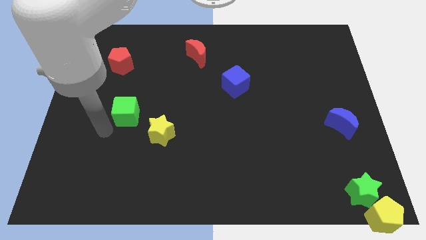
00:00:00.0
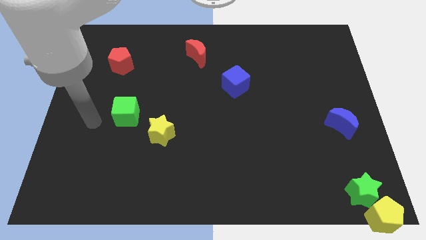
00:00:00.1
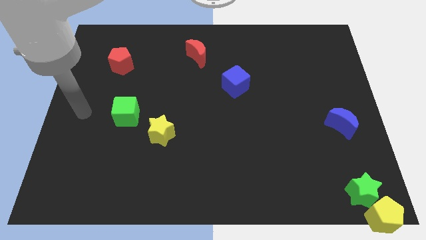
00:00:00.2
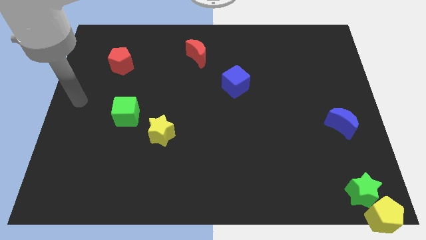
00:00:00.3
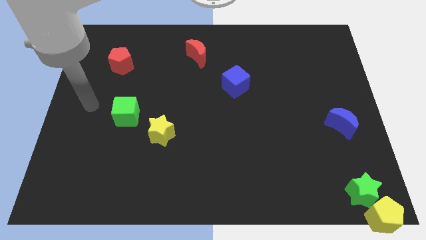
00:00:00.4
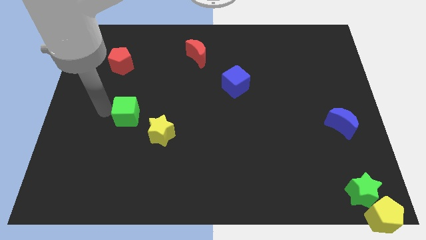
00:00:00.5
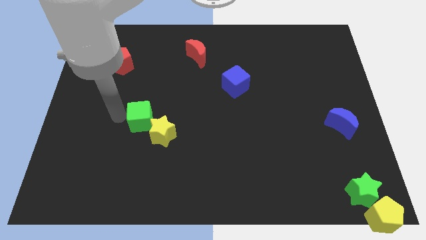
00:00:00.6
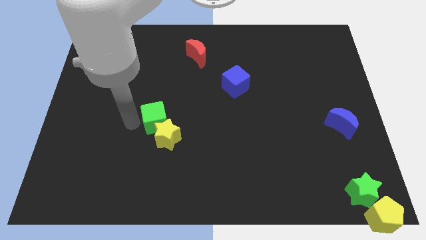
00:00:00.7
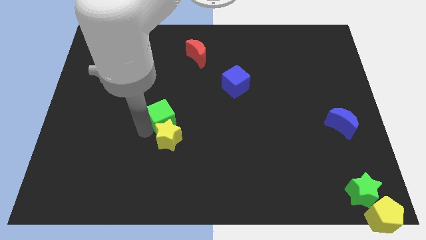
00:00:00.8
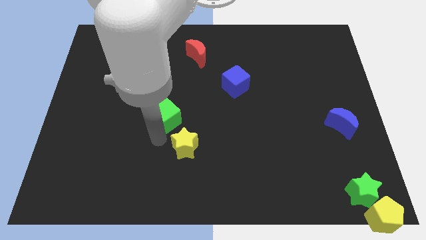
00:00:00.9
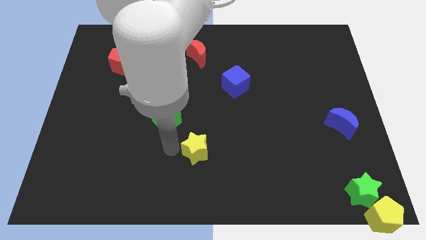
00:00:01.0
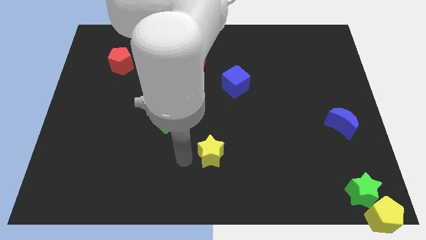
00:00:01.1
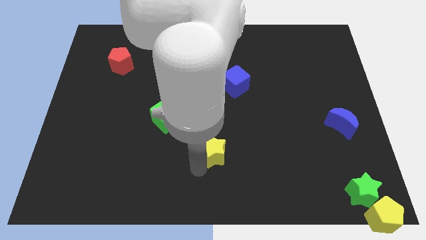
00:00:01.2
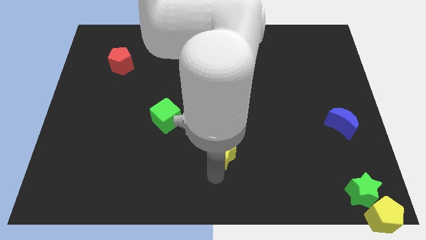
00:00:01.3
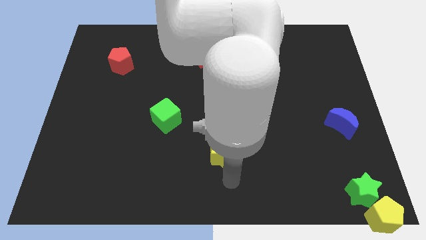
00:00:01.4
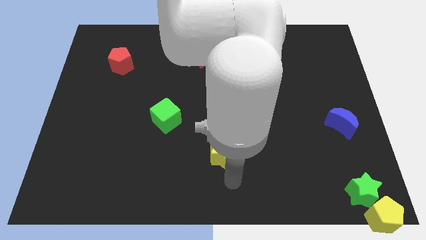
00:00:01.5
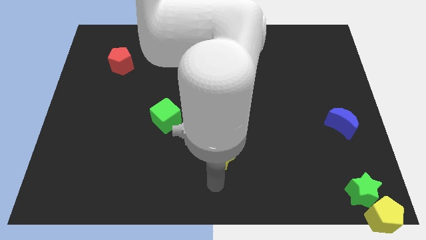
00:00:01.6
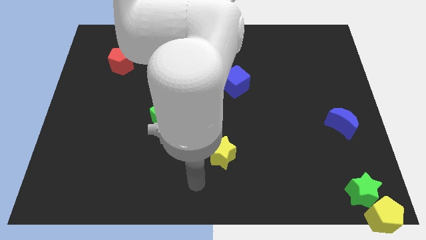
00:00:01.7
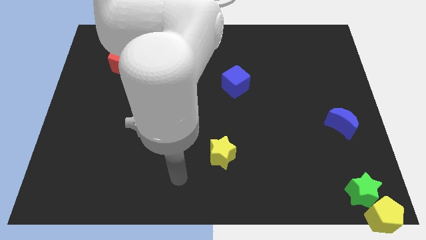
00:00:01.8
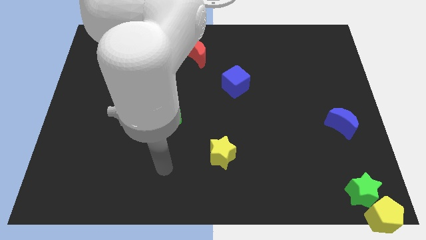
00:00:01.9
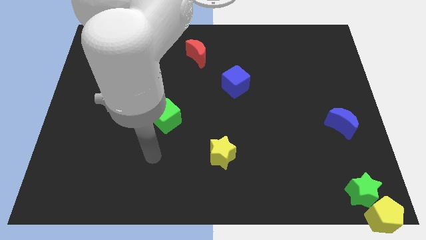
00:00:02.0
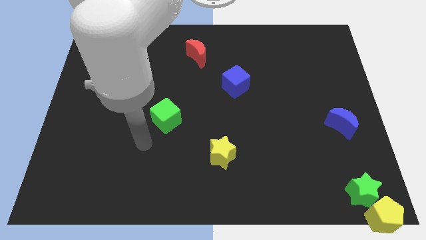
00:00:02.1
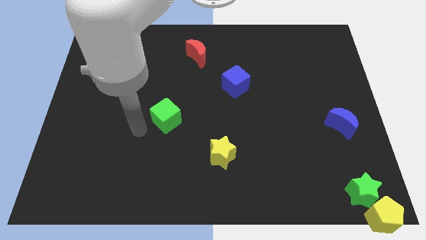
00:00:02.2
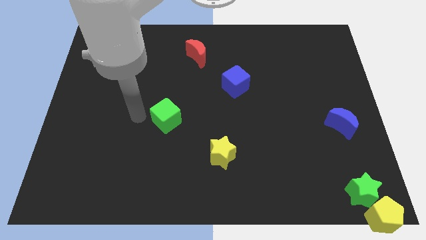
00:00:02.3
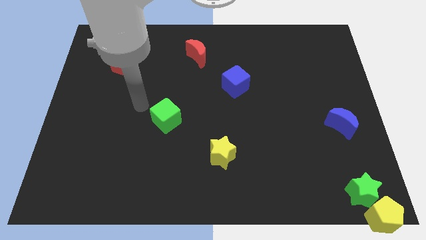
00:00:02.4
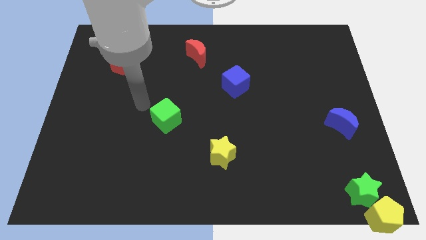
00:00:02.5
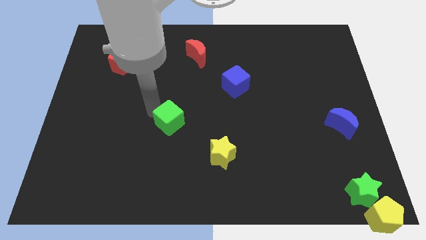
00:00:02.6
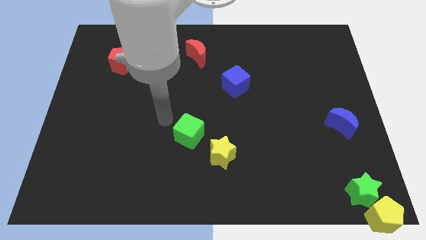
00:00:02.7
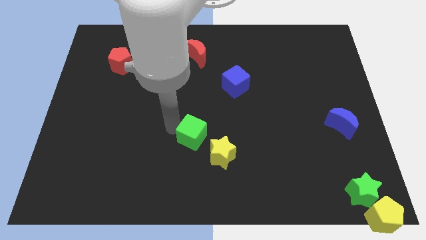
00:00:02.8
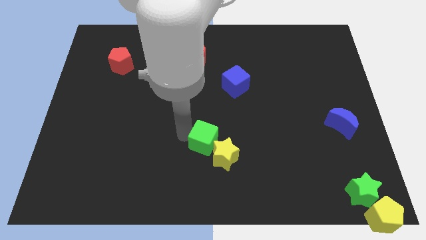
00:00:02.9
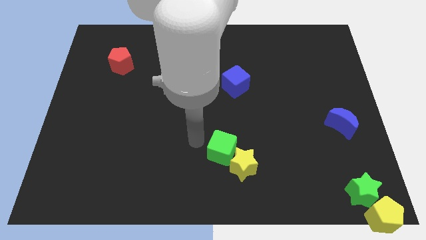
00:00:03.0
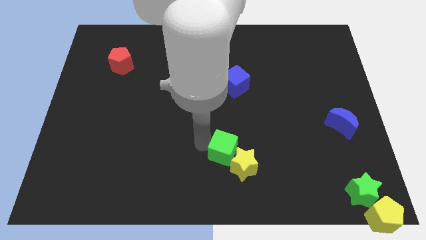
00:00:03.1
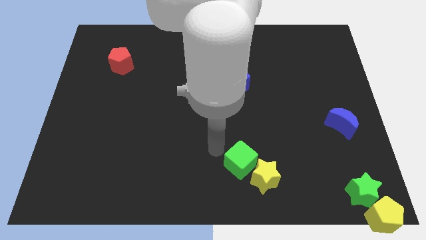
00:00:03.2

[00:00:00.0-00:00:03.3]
move green cube into the yellow star

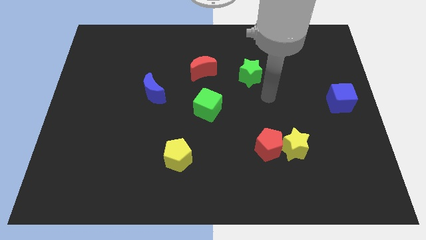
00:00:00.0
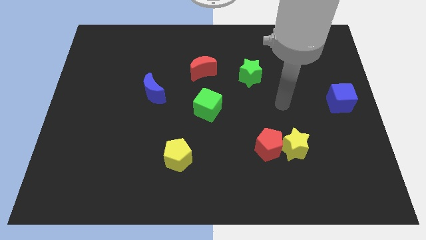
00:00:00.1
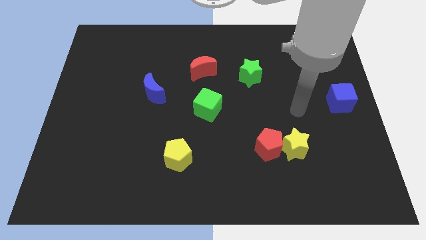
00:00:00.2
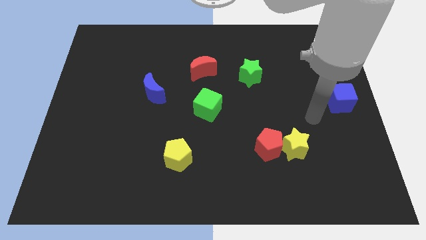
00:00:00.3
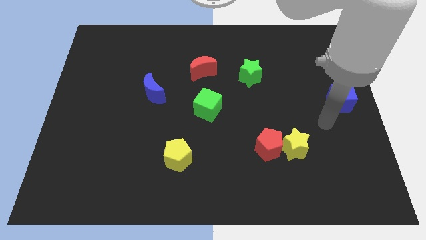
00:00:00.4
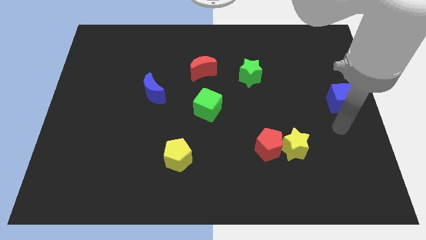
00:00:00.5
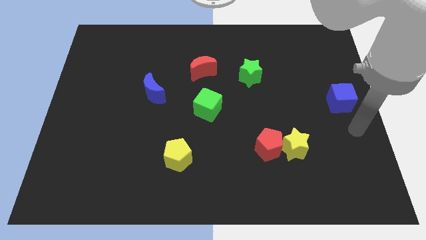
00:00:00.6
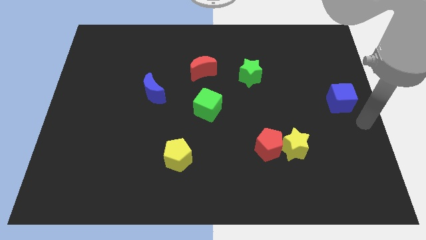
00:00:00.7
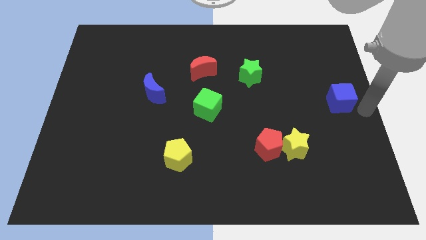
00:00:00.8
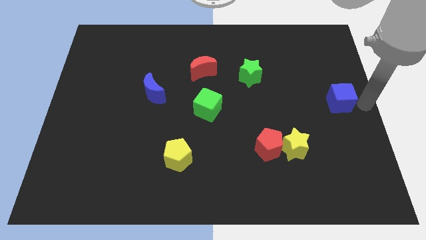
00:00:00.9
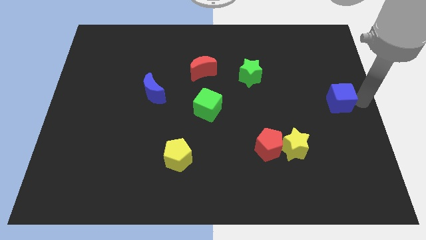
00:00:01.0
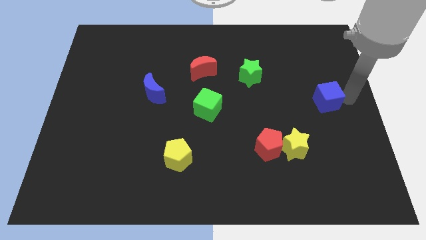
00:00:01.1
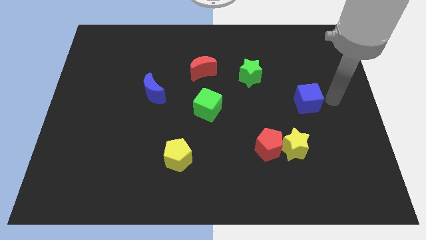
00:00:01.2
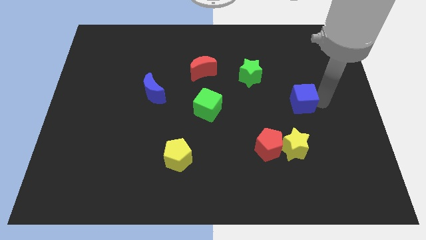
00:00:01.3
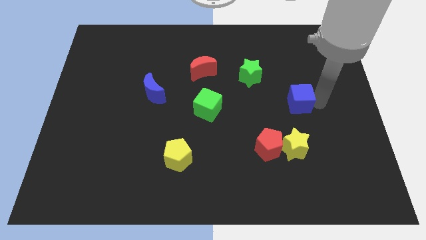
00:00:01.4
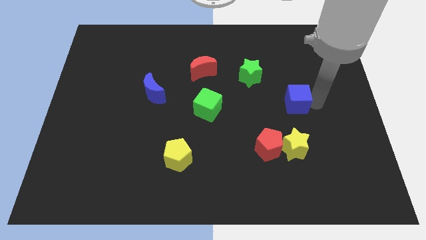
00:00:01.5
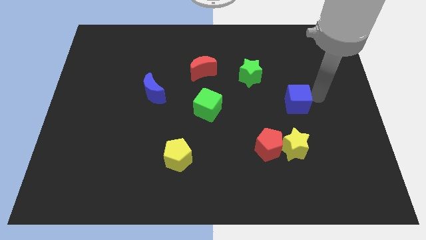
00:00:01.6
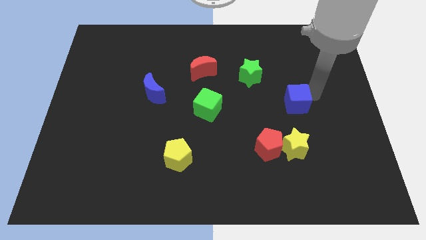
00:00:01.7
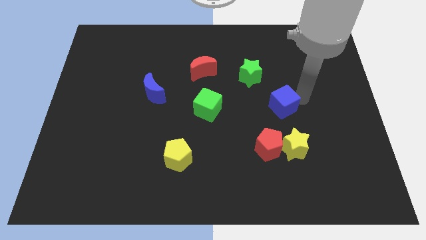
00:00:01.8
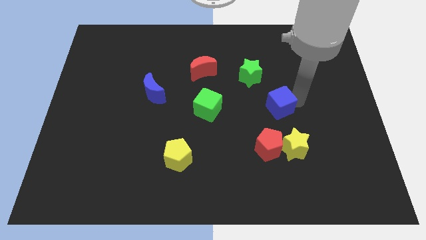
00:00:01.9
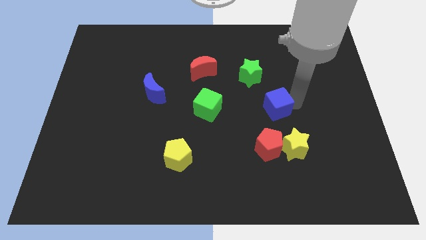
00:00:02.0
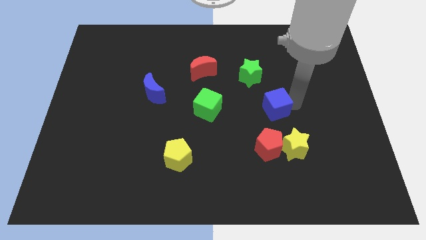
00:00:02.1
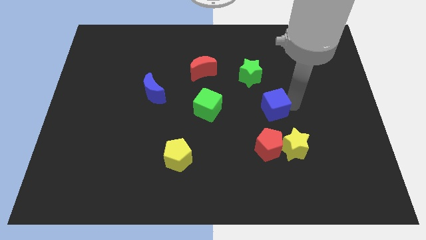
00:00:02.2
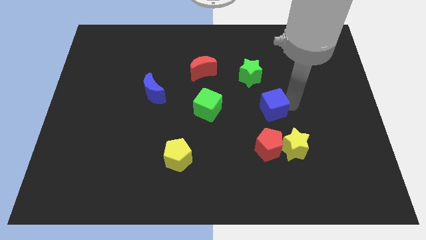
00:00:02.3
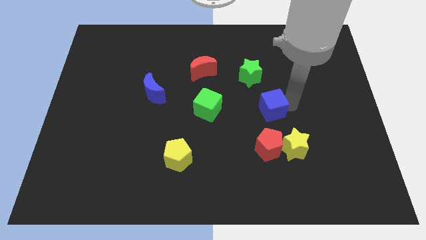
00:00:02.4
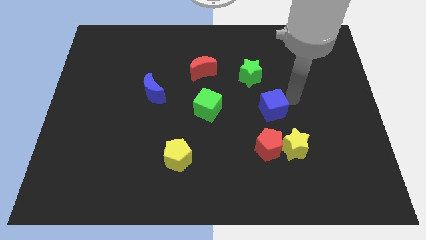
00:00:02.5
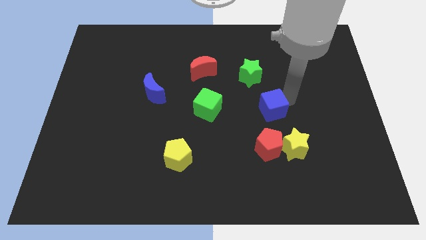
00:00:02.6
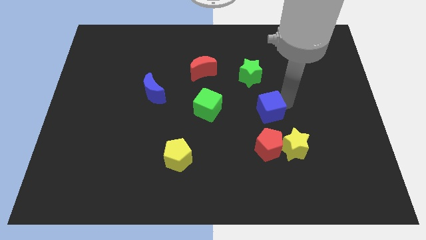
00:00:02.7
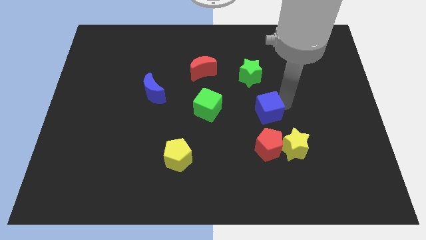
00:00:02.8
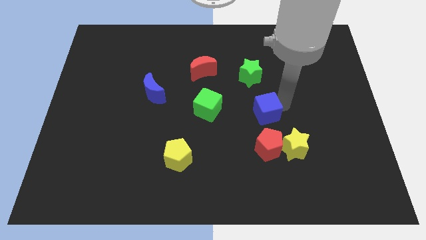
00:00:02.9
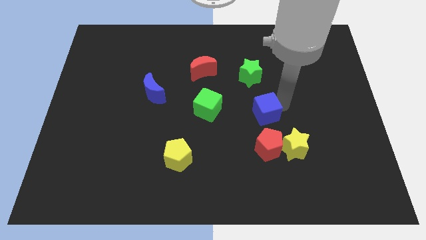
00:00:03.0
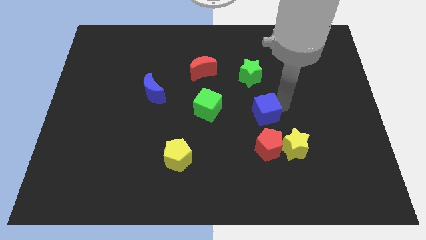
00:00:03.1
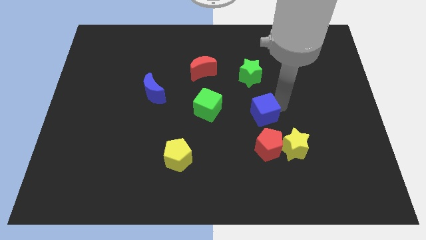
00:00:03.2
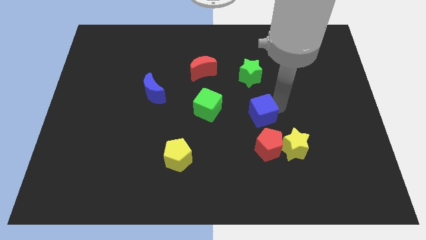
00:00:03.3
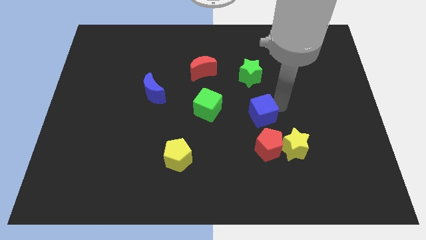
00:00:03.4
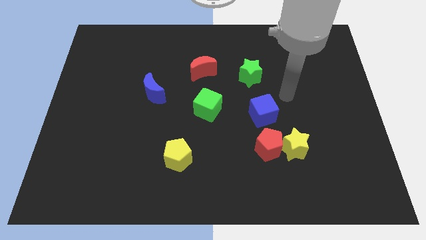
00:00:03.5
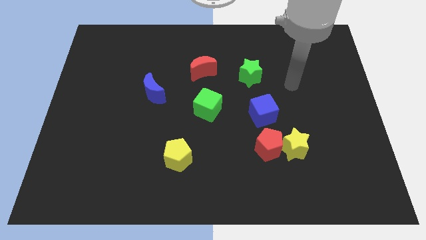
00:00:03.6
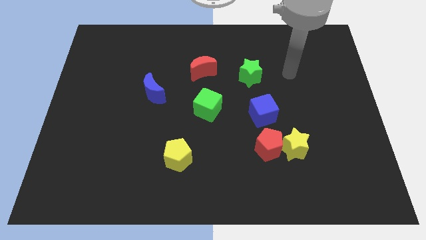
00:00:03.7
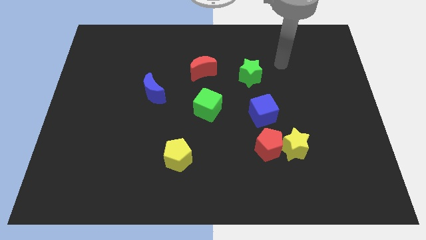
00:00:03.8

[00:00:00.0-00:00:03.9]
place the blue cube above the red pentagon

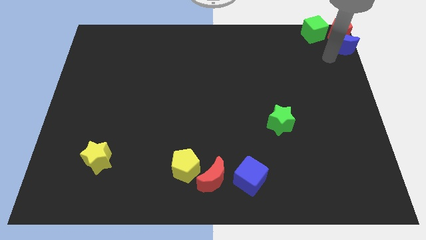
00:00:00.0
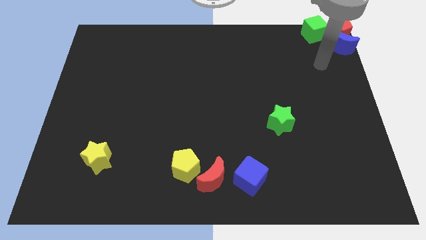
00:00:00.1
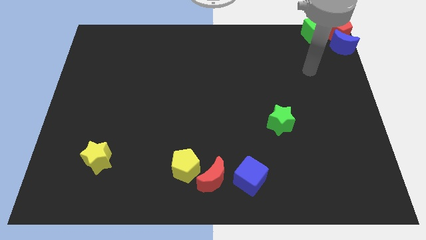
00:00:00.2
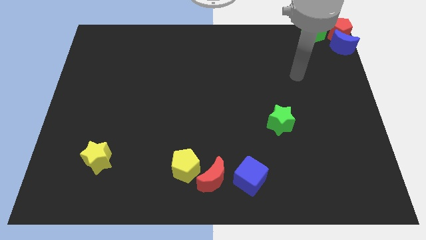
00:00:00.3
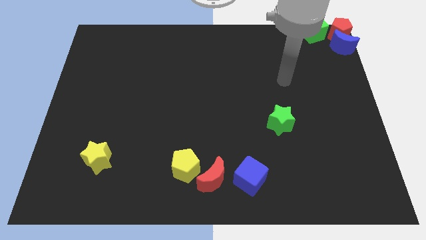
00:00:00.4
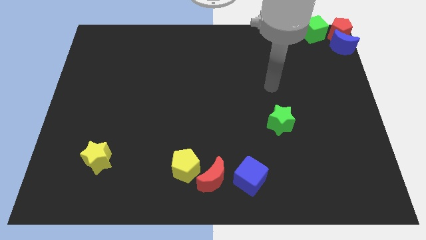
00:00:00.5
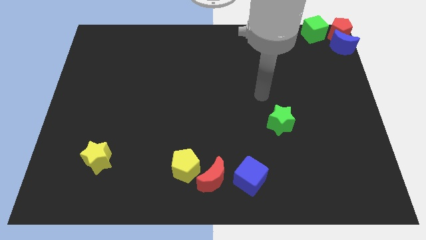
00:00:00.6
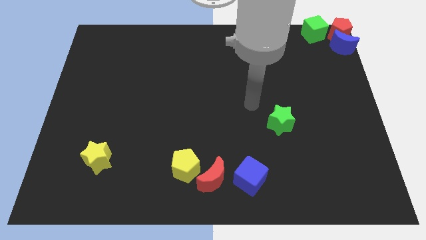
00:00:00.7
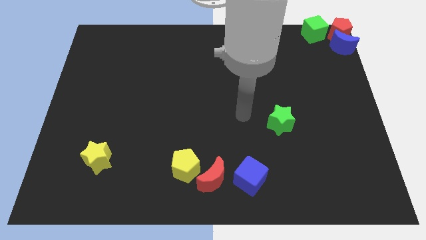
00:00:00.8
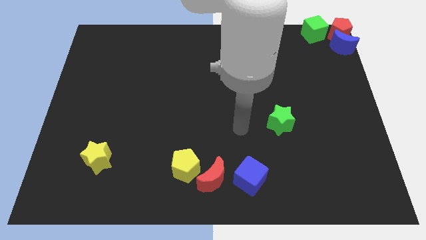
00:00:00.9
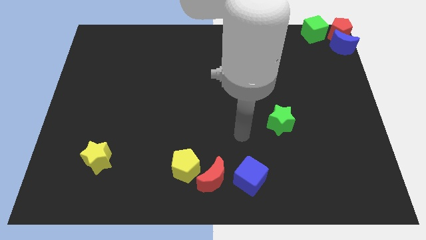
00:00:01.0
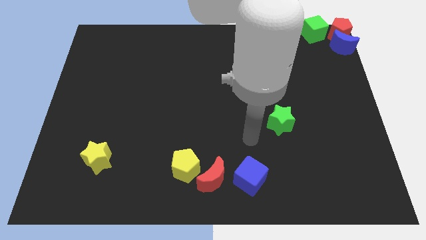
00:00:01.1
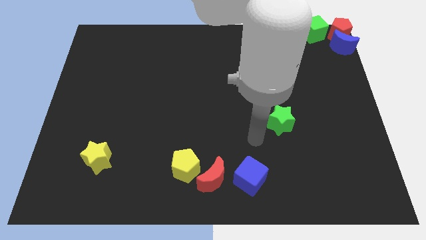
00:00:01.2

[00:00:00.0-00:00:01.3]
move your arm away from the blue moon

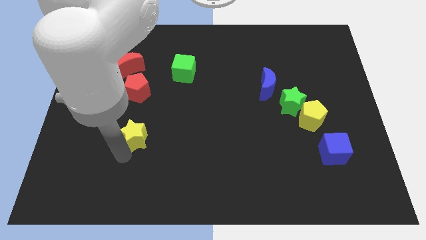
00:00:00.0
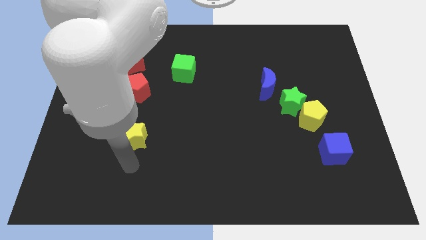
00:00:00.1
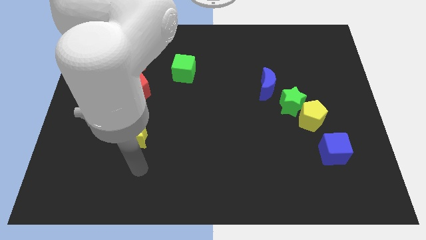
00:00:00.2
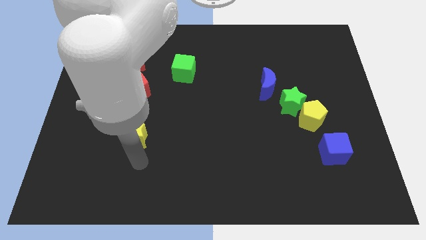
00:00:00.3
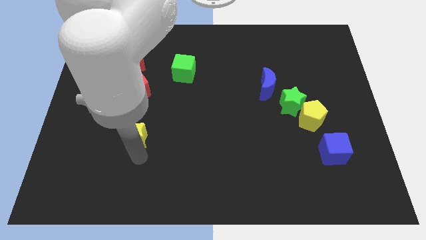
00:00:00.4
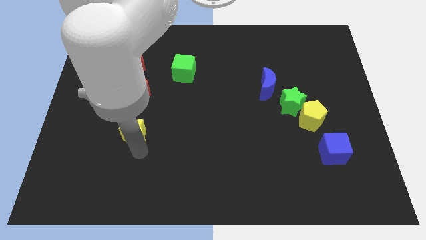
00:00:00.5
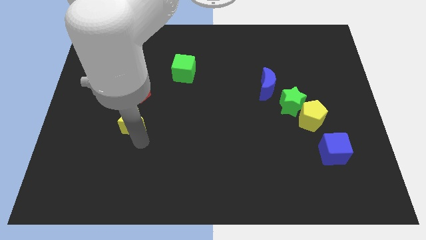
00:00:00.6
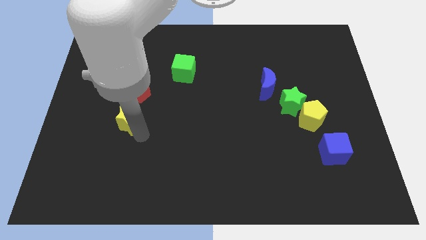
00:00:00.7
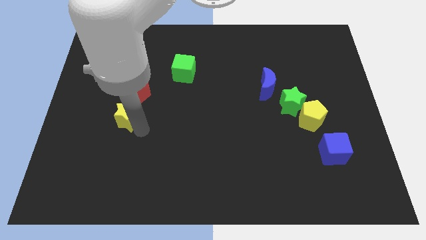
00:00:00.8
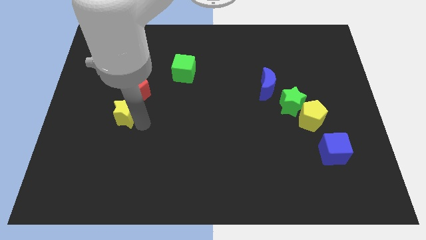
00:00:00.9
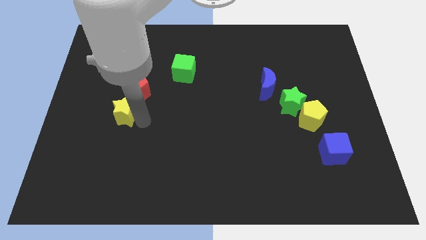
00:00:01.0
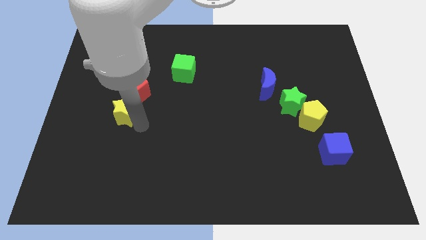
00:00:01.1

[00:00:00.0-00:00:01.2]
place the yellow star below the red pentagon
